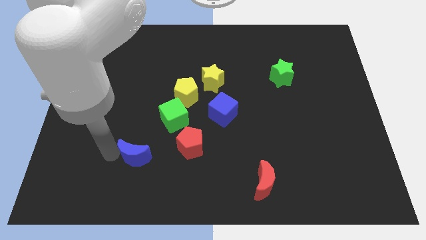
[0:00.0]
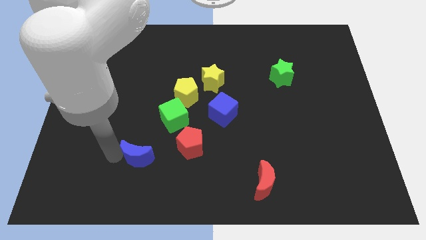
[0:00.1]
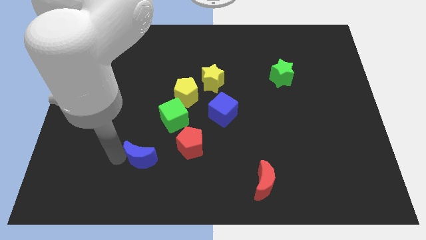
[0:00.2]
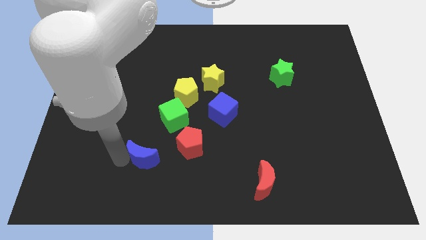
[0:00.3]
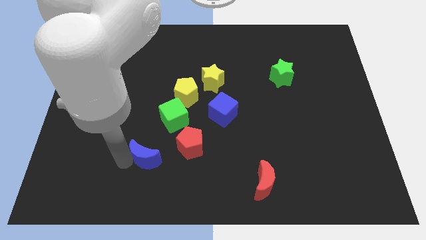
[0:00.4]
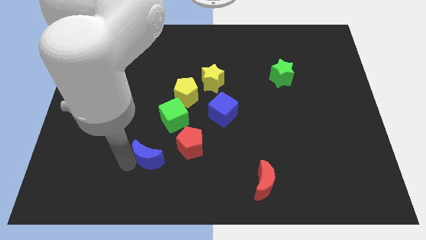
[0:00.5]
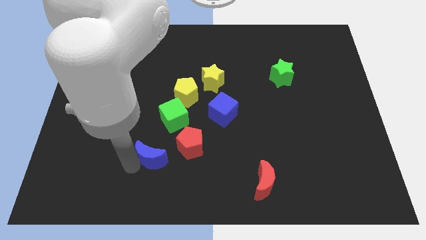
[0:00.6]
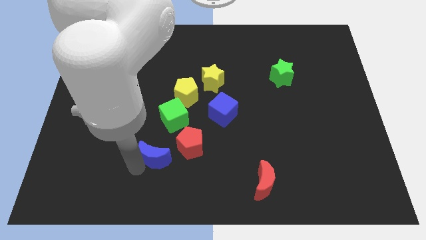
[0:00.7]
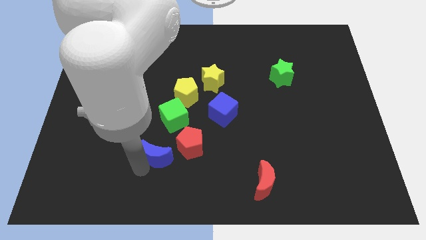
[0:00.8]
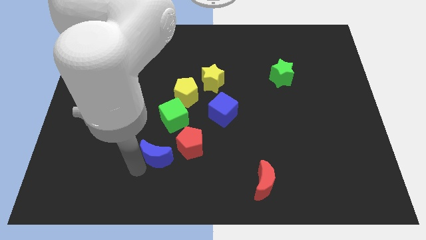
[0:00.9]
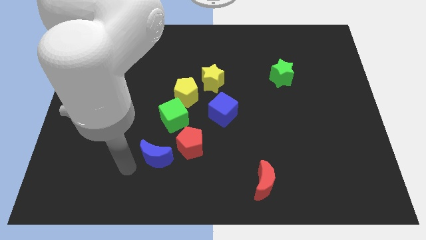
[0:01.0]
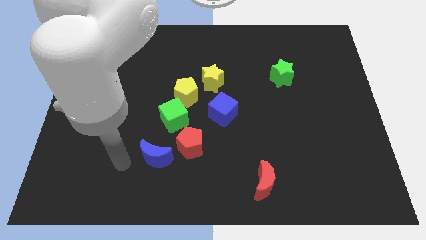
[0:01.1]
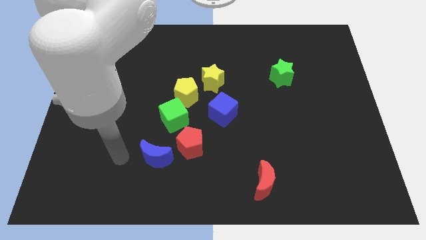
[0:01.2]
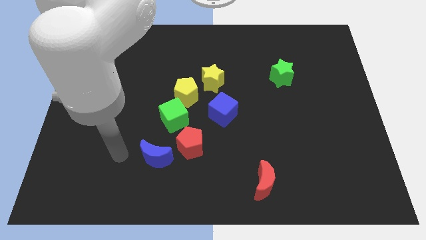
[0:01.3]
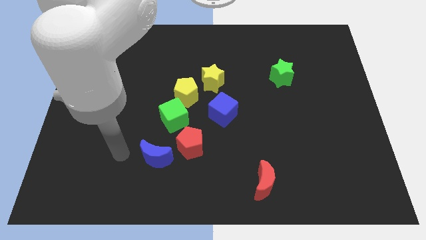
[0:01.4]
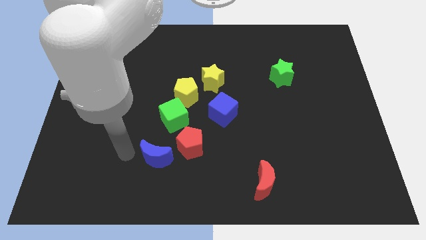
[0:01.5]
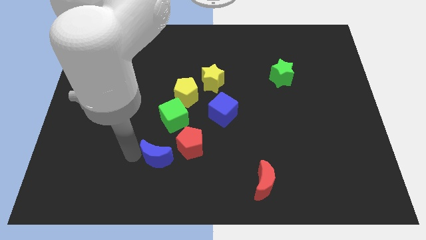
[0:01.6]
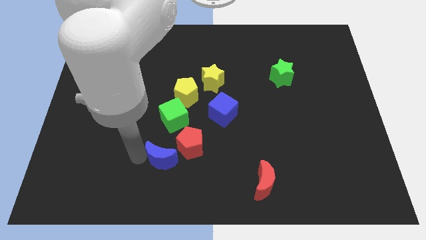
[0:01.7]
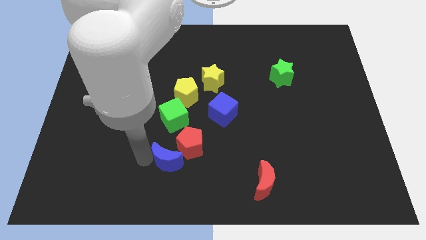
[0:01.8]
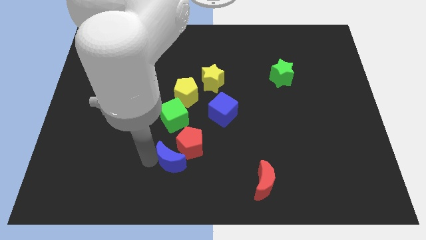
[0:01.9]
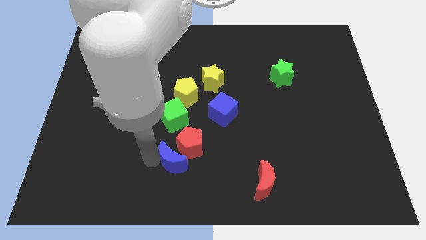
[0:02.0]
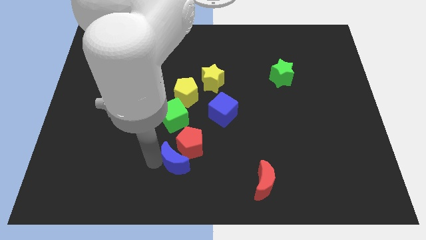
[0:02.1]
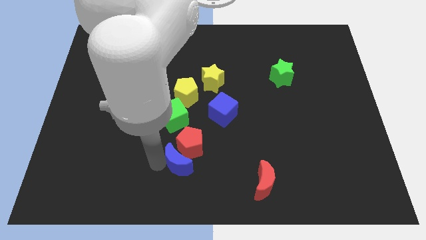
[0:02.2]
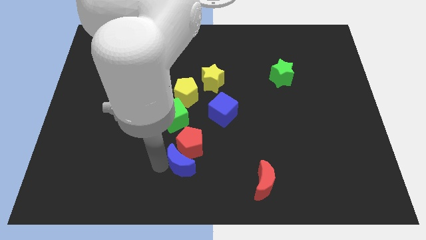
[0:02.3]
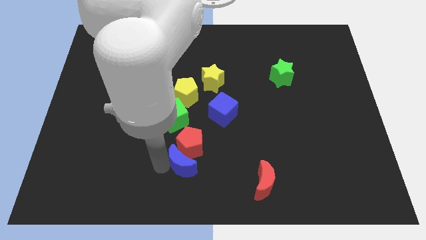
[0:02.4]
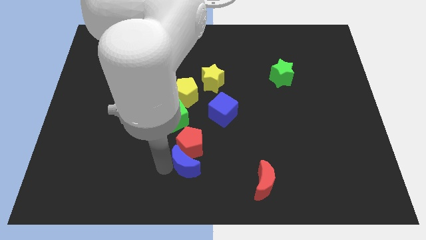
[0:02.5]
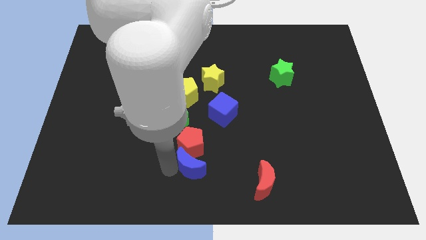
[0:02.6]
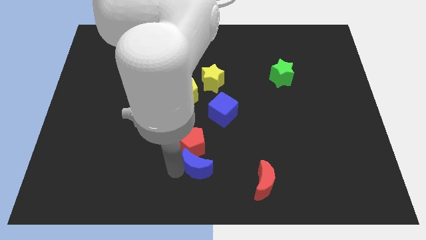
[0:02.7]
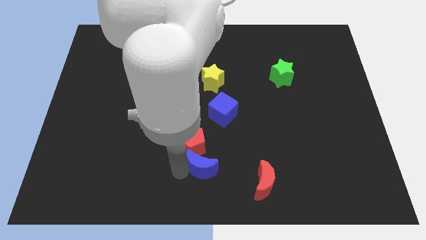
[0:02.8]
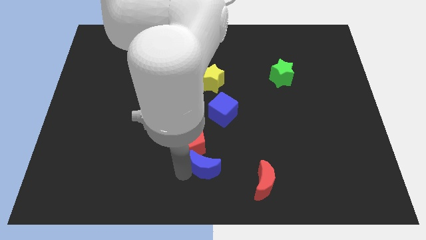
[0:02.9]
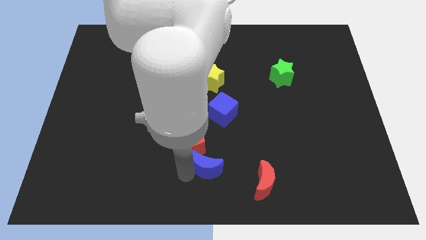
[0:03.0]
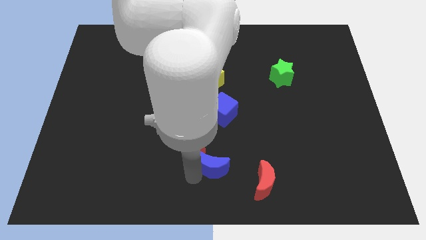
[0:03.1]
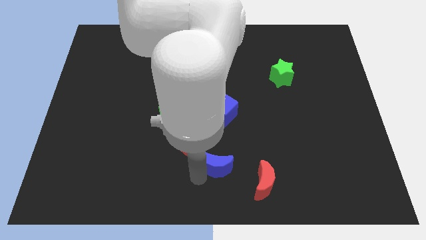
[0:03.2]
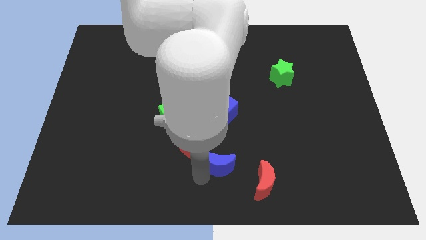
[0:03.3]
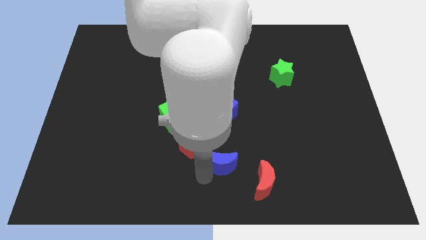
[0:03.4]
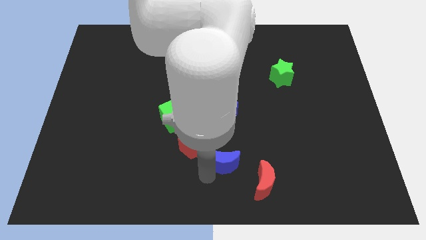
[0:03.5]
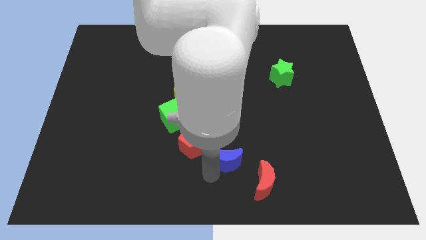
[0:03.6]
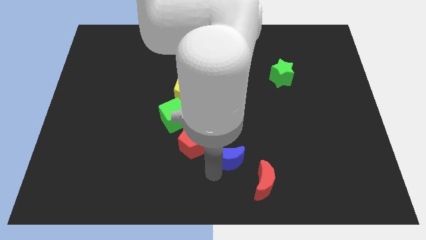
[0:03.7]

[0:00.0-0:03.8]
slide the blue moon to the bottom center of the board

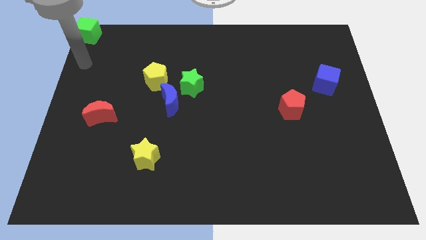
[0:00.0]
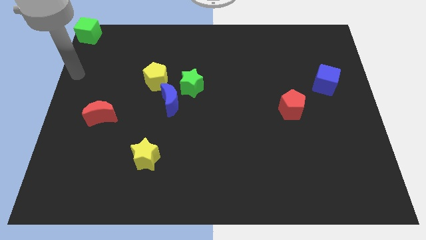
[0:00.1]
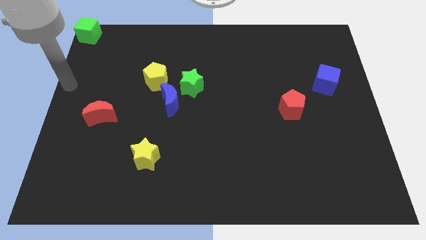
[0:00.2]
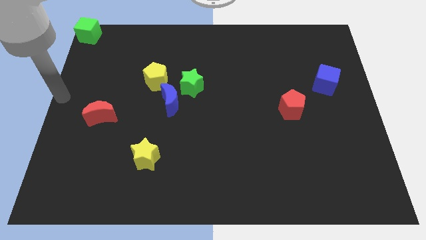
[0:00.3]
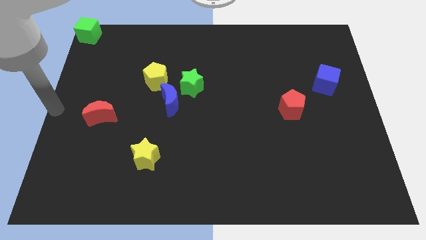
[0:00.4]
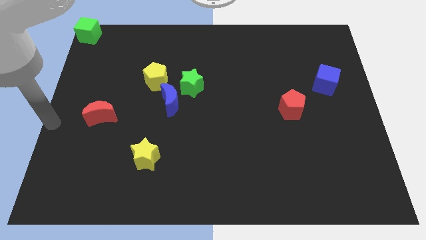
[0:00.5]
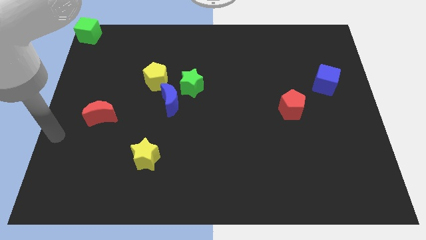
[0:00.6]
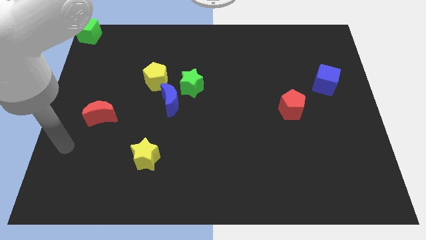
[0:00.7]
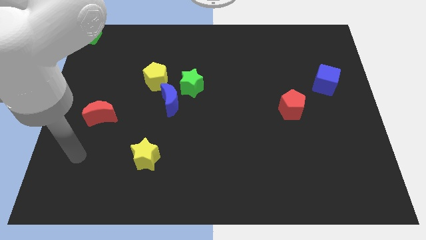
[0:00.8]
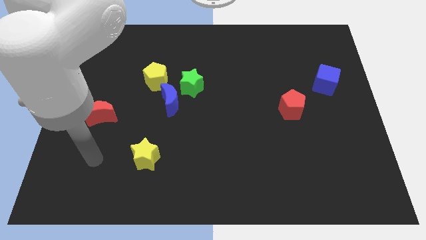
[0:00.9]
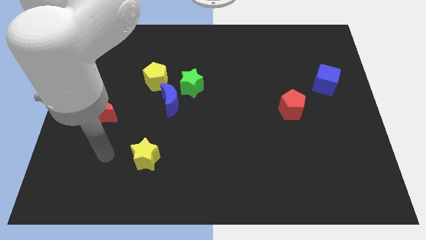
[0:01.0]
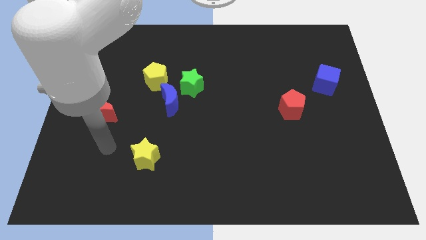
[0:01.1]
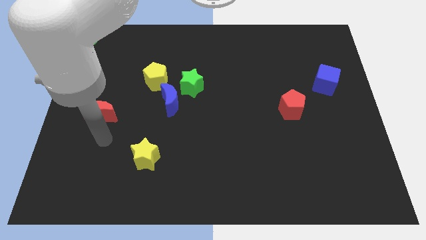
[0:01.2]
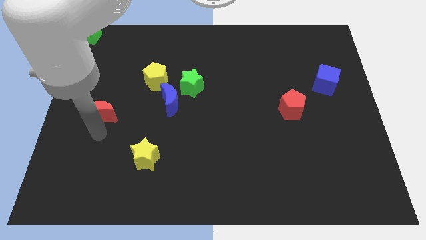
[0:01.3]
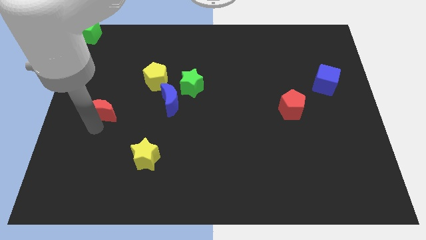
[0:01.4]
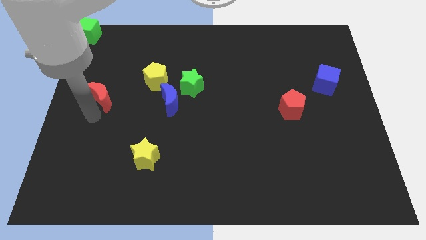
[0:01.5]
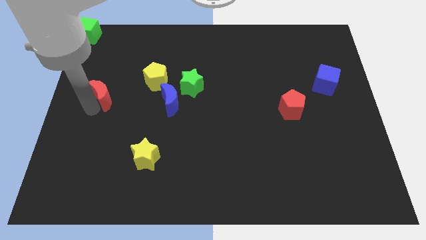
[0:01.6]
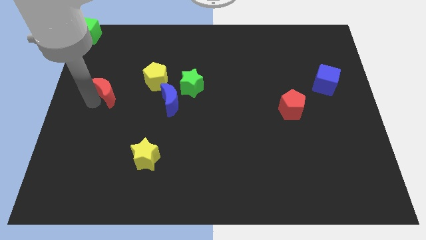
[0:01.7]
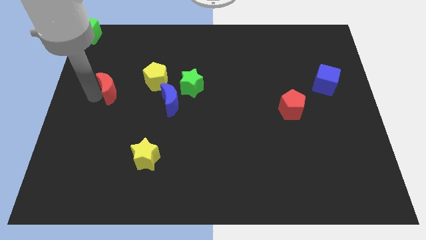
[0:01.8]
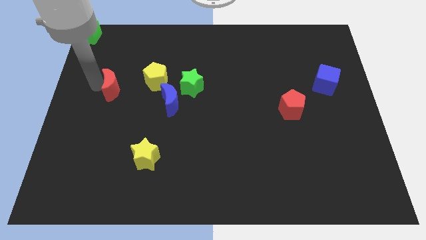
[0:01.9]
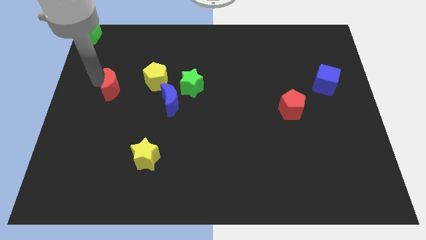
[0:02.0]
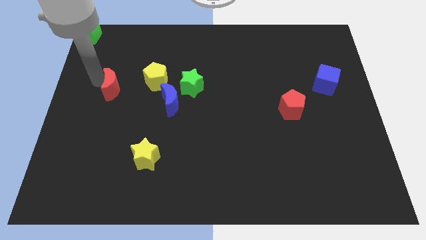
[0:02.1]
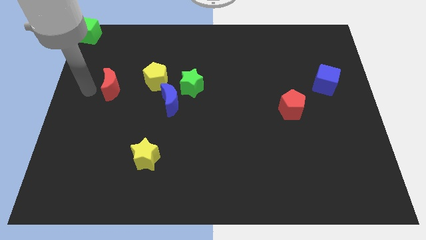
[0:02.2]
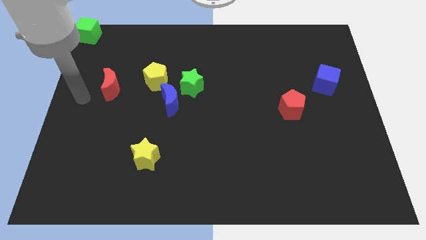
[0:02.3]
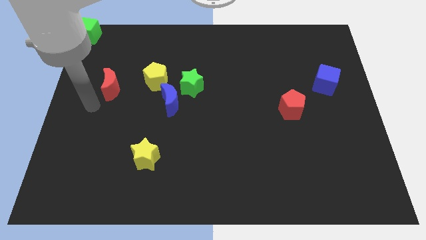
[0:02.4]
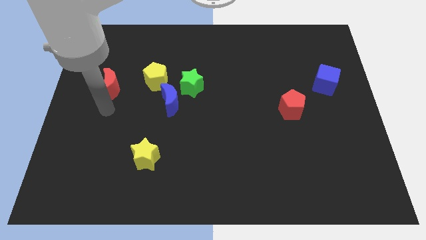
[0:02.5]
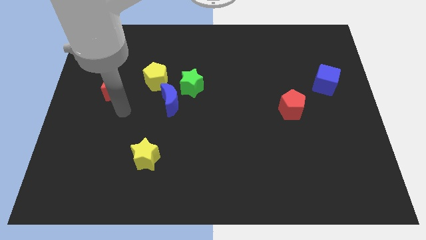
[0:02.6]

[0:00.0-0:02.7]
place red crescent beside yellow pentagon

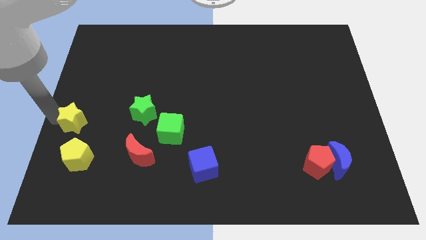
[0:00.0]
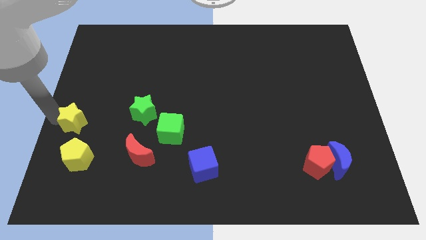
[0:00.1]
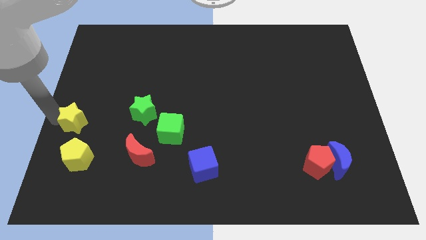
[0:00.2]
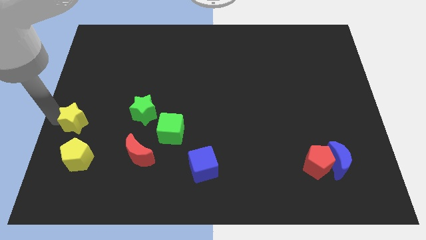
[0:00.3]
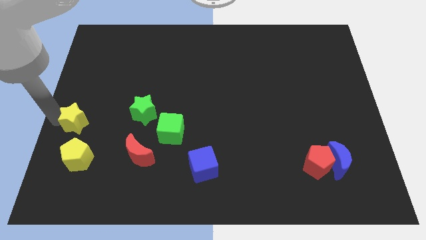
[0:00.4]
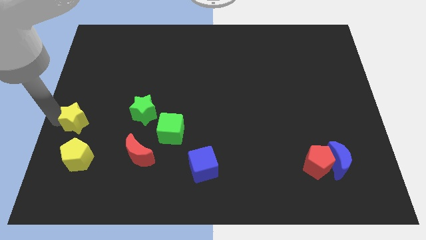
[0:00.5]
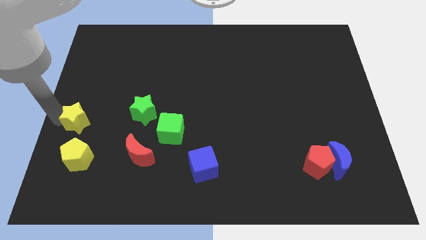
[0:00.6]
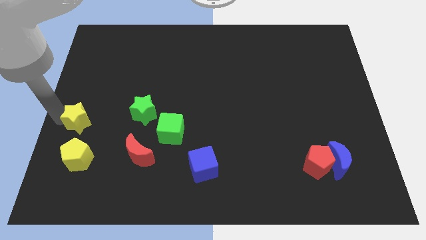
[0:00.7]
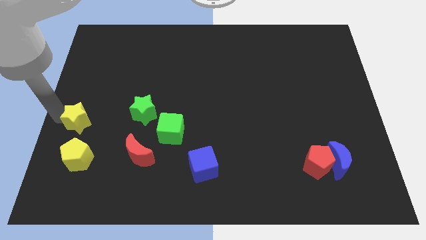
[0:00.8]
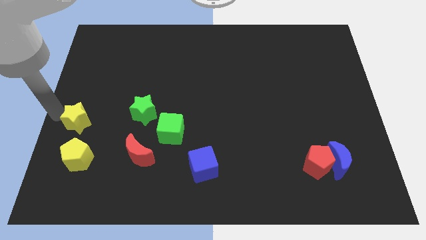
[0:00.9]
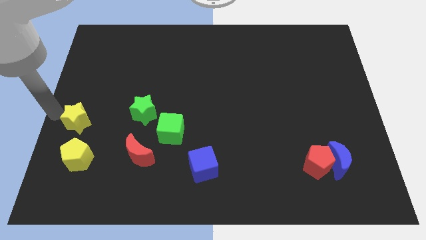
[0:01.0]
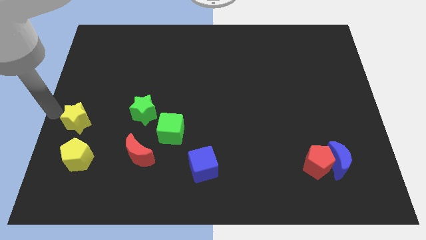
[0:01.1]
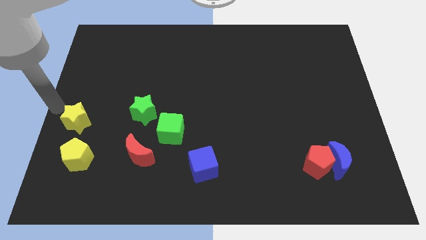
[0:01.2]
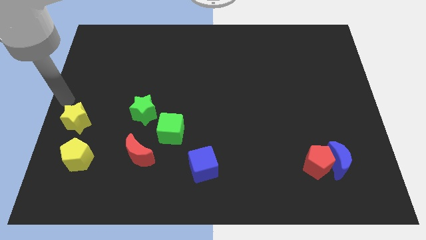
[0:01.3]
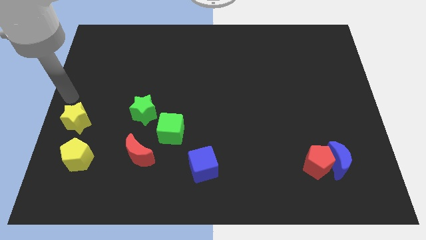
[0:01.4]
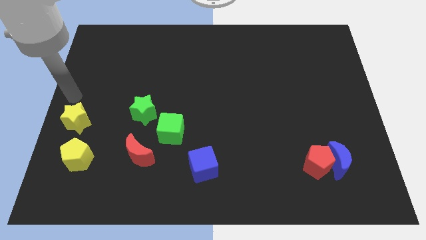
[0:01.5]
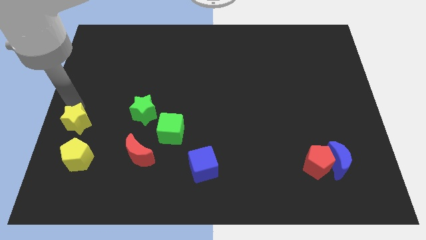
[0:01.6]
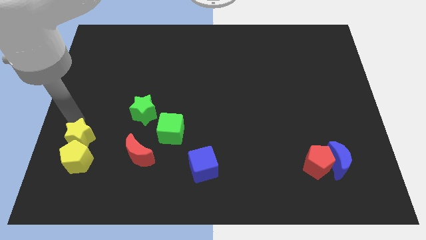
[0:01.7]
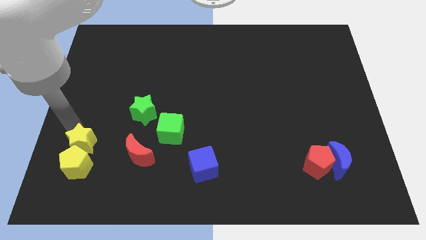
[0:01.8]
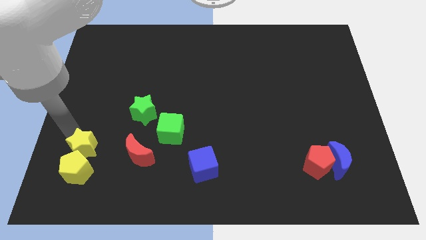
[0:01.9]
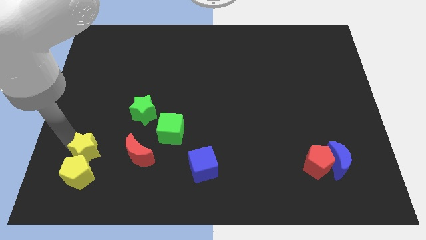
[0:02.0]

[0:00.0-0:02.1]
push slightly yellow star towards yellow pentagon

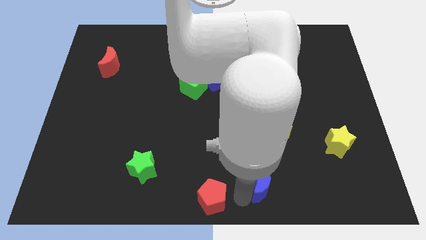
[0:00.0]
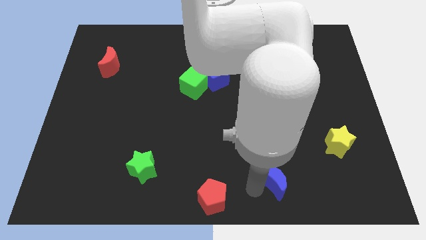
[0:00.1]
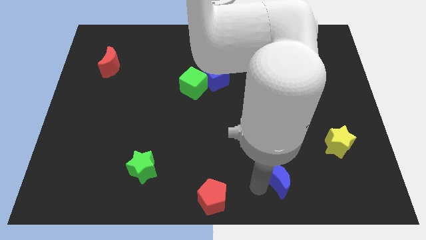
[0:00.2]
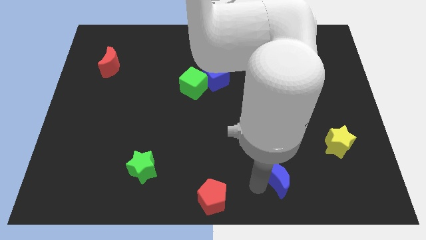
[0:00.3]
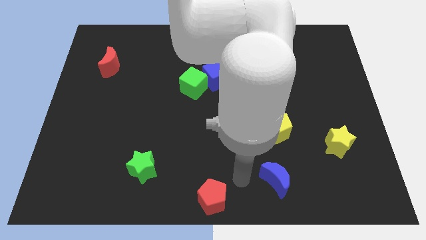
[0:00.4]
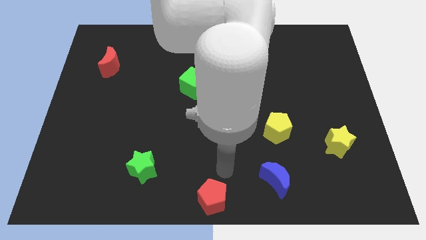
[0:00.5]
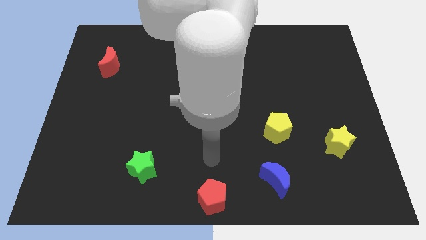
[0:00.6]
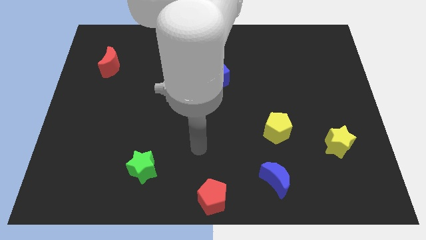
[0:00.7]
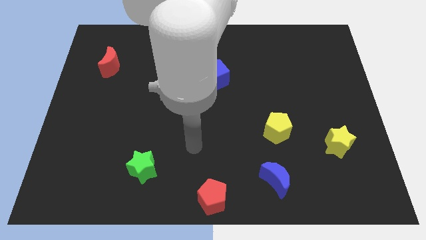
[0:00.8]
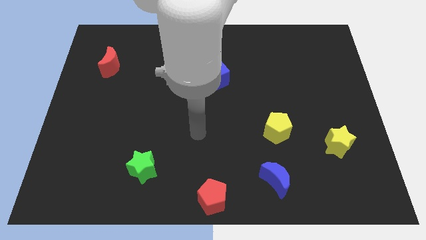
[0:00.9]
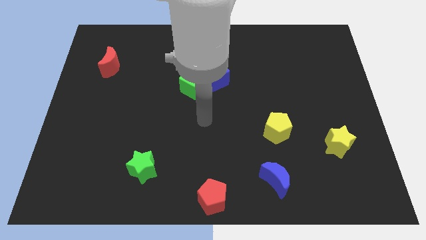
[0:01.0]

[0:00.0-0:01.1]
slightly move blue crescent
